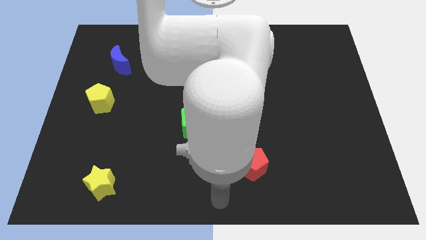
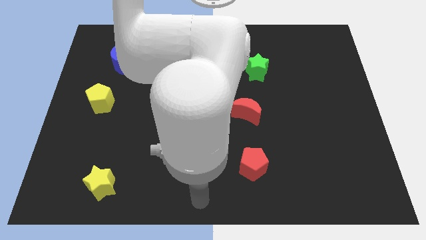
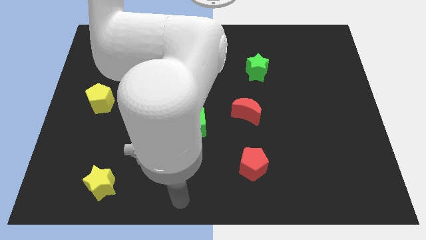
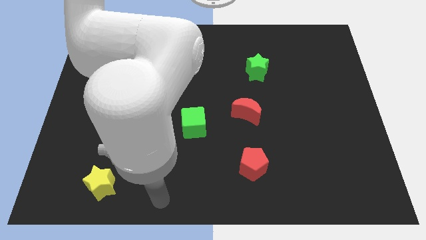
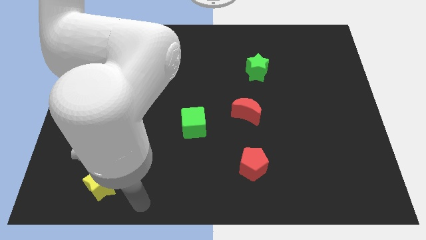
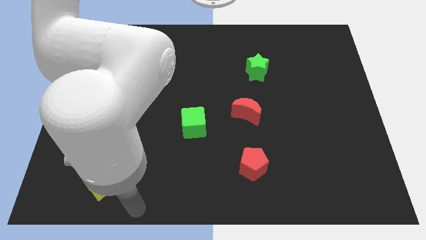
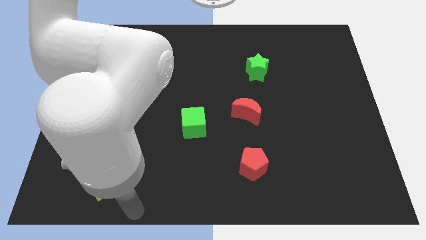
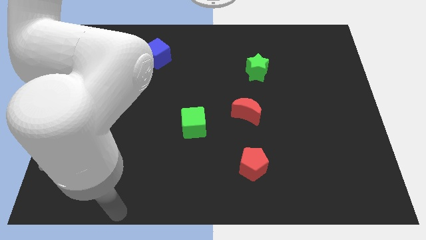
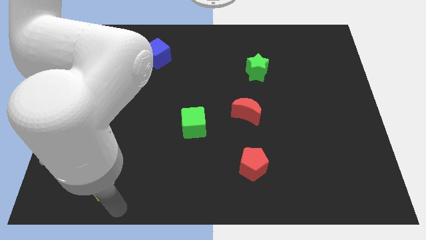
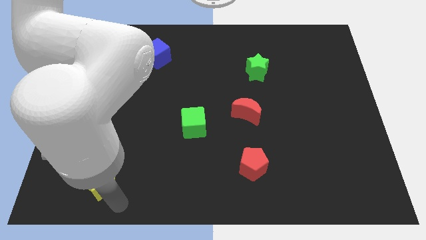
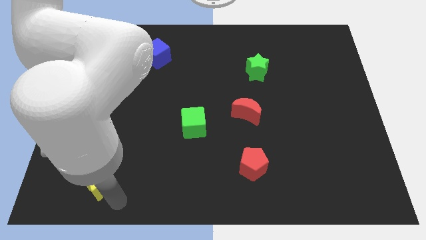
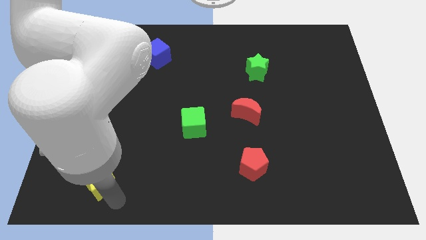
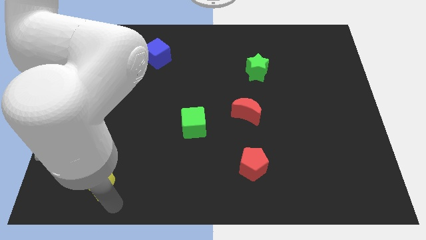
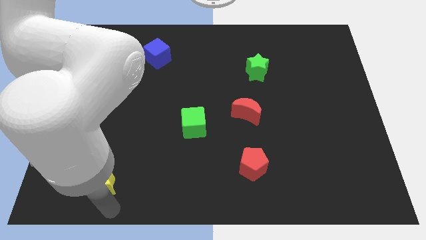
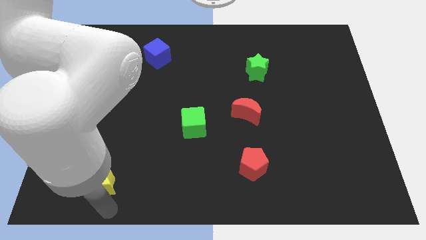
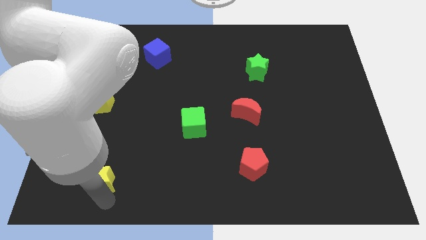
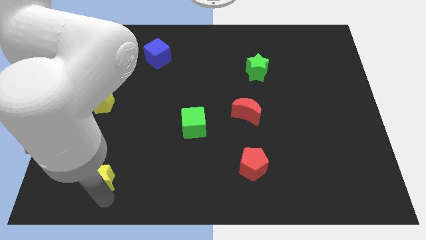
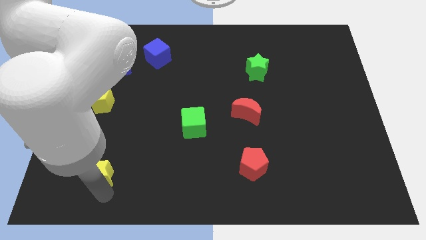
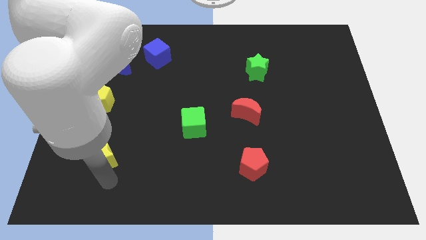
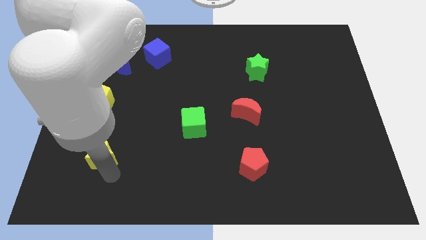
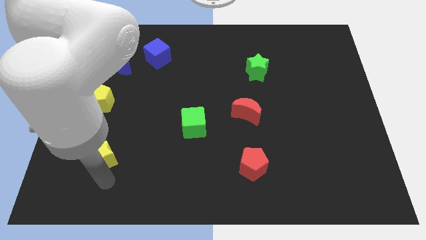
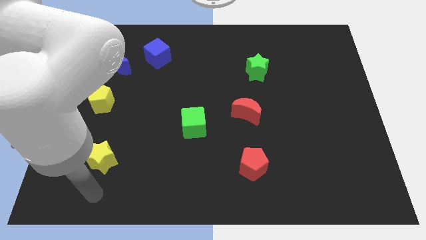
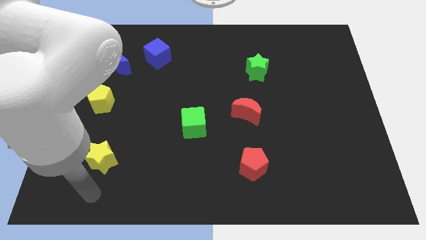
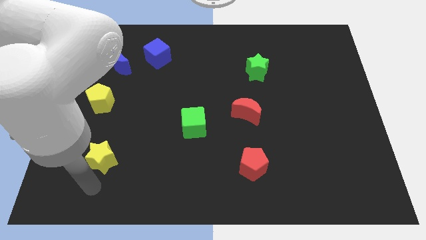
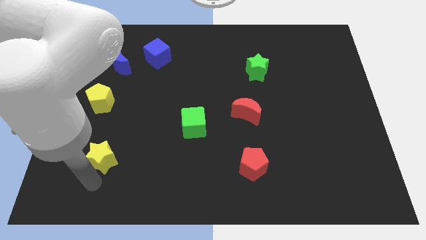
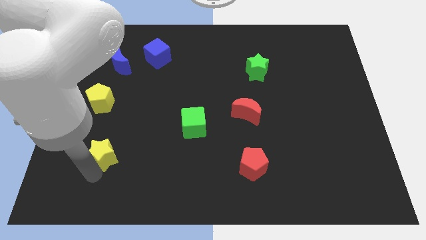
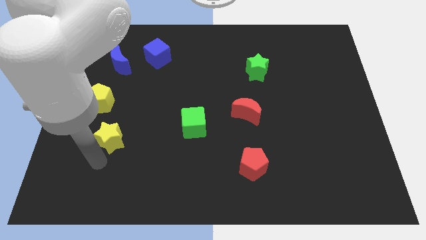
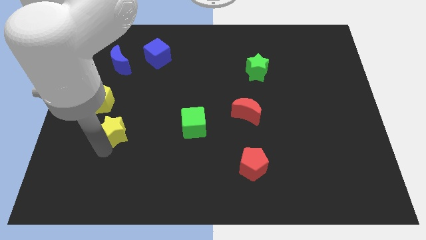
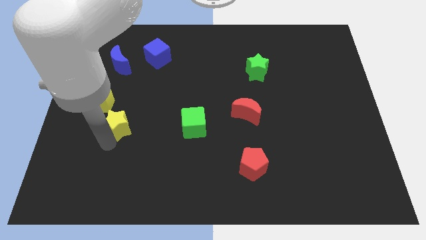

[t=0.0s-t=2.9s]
push the yellow star to the left of the green cube

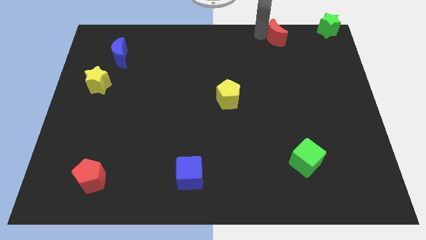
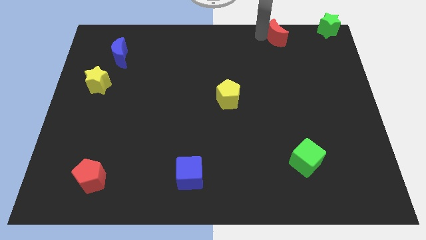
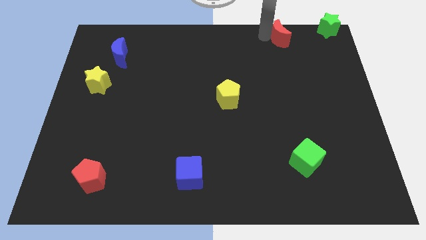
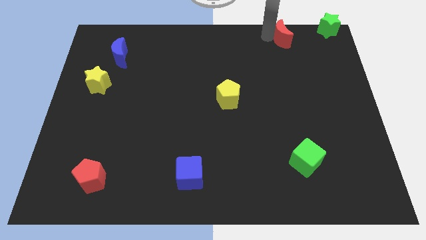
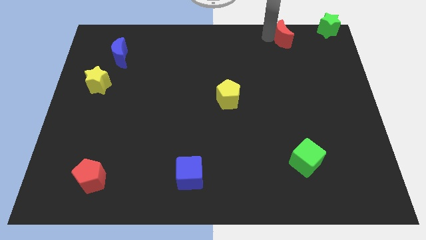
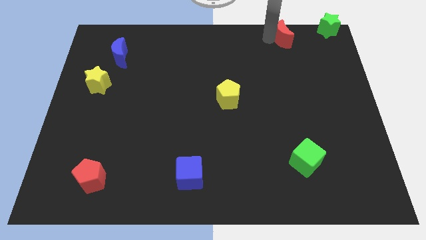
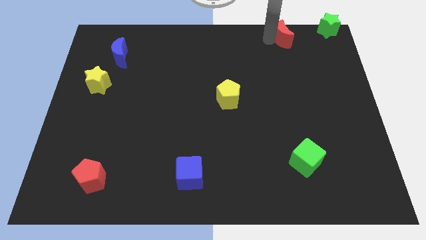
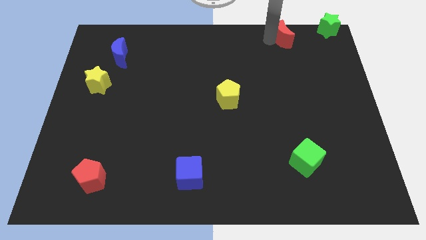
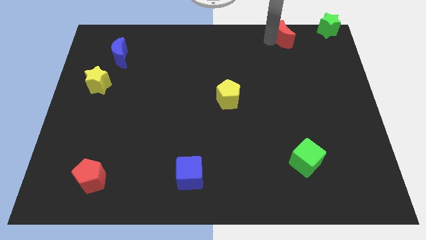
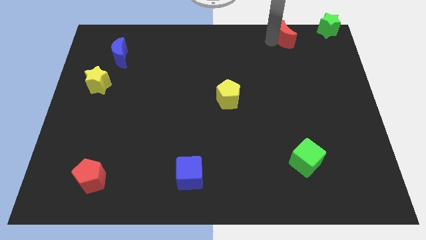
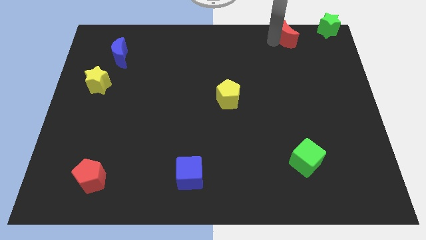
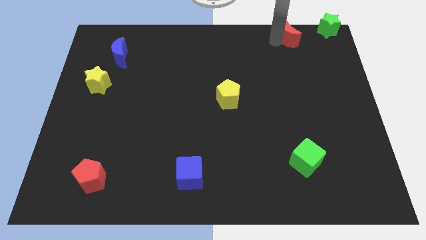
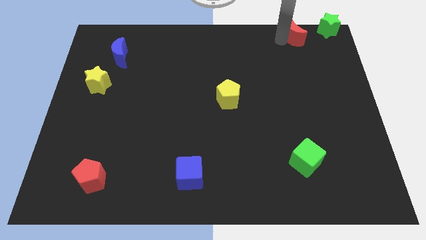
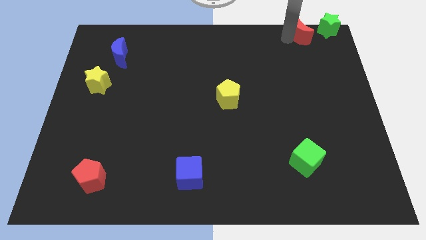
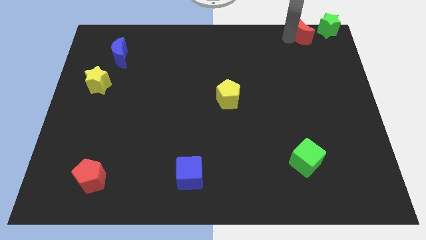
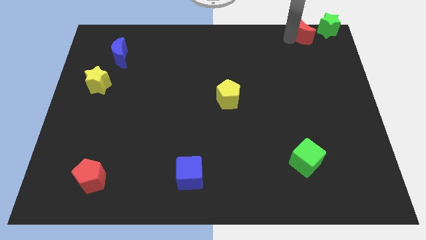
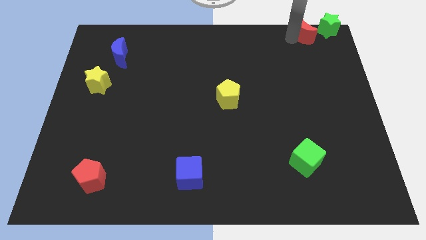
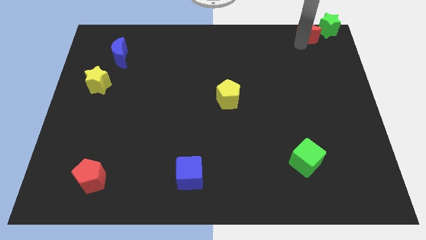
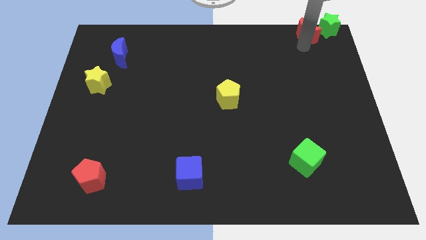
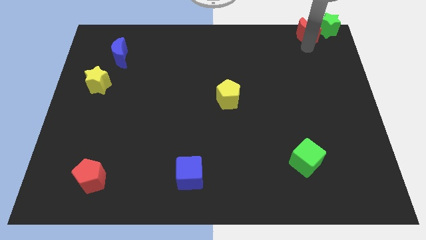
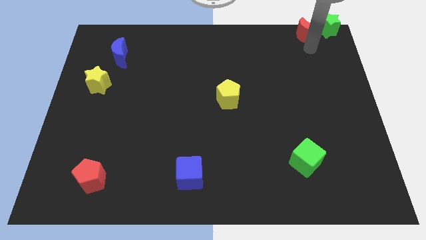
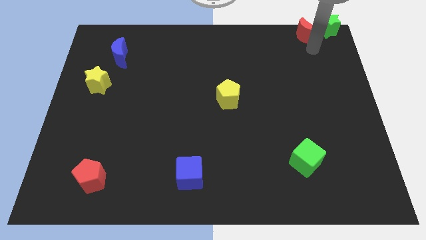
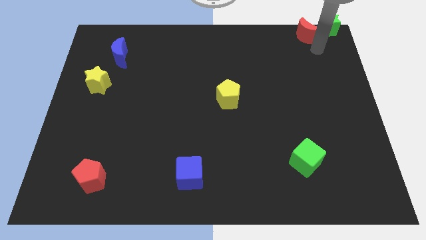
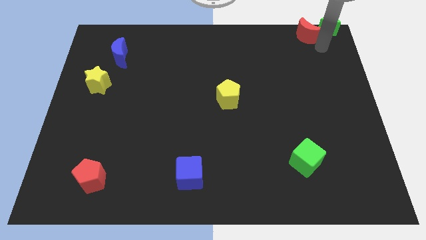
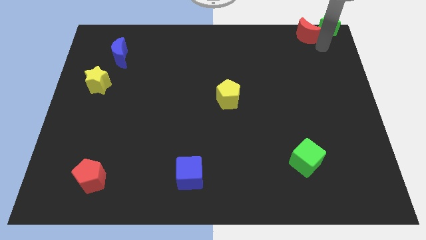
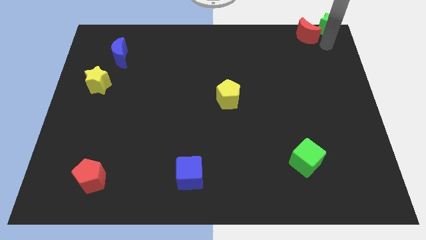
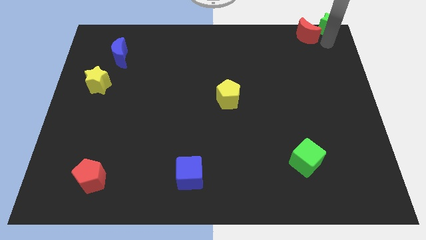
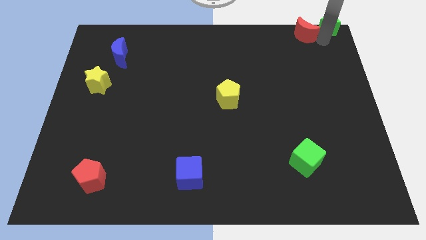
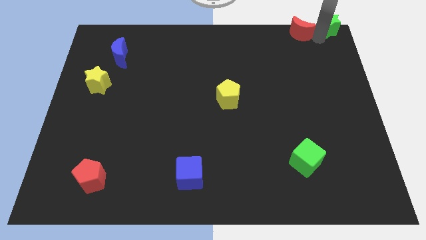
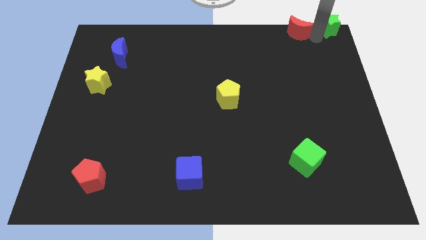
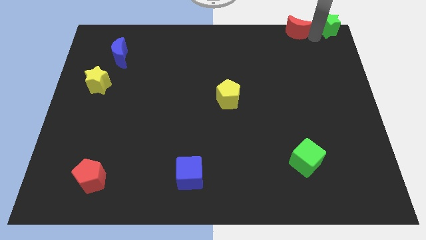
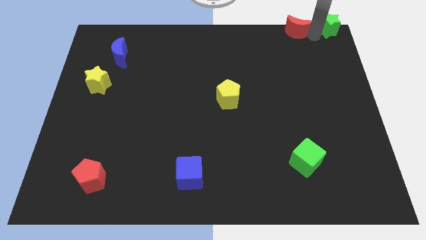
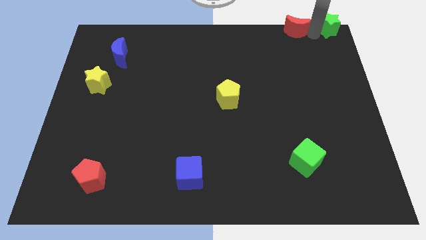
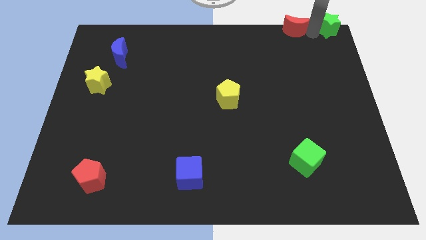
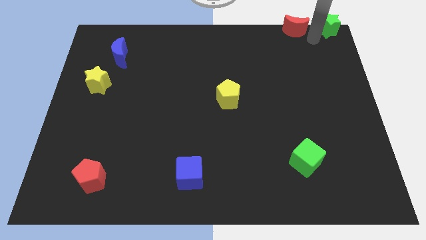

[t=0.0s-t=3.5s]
place your arm in between the red moon and green star

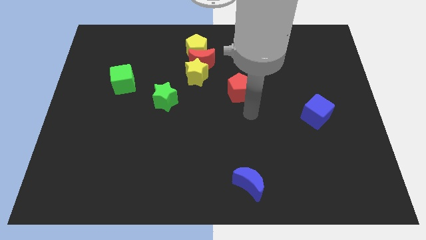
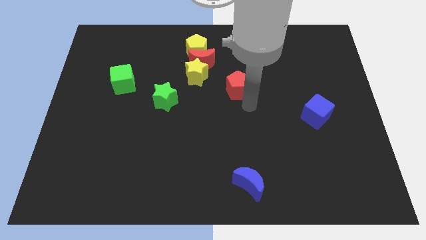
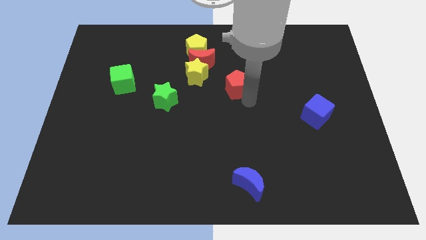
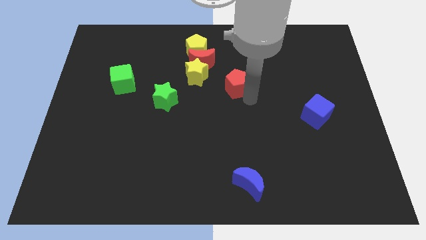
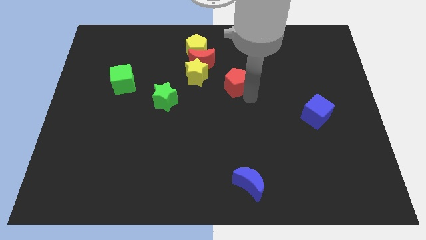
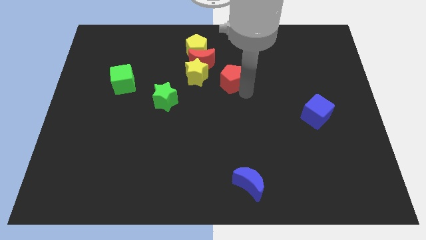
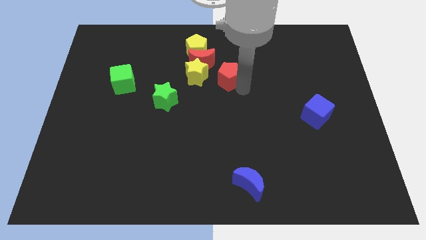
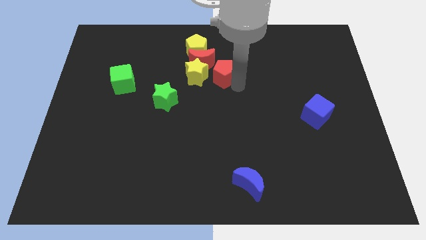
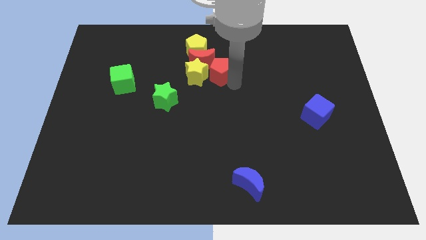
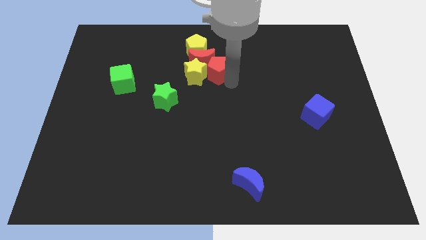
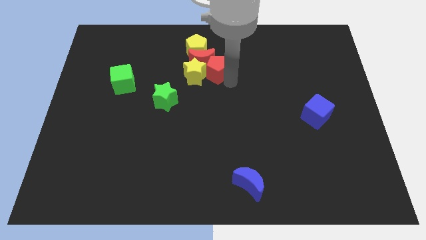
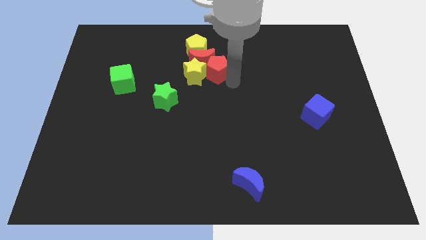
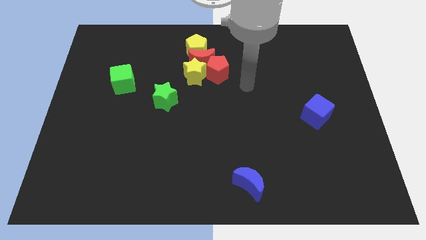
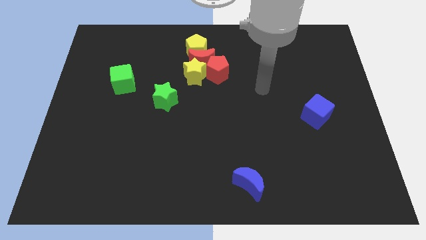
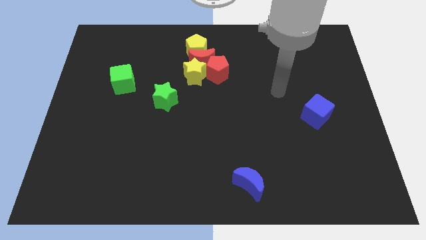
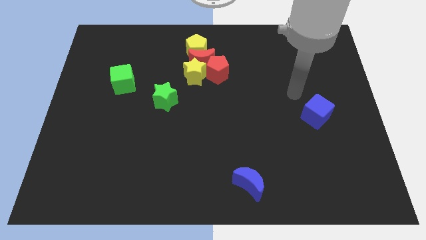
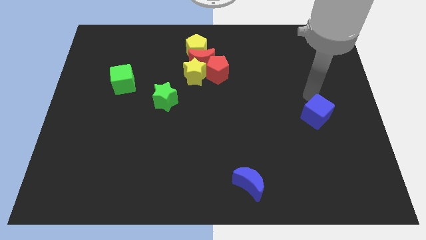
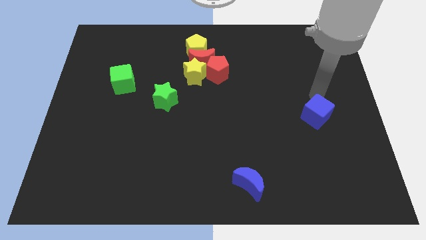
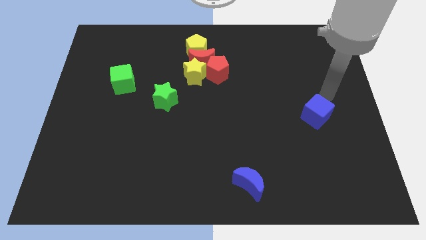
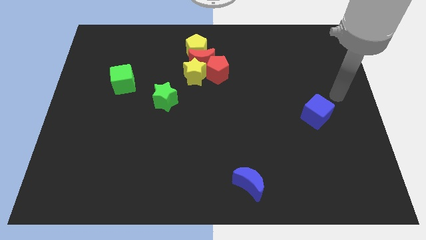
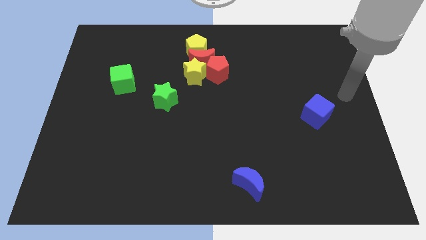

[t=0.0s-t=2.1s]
place the red pentagon below the right side of the red moon

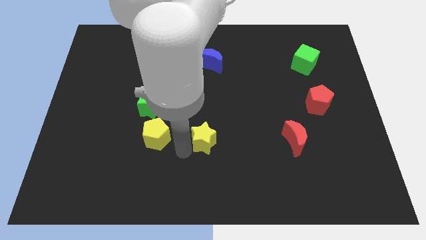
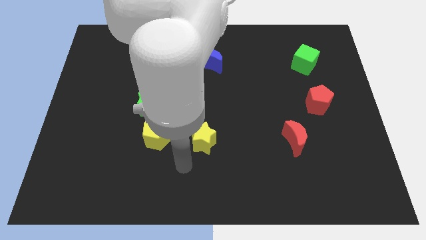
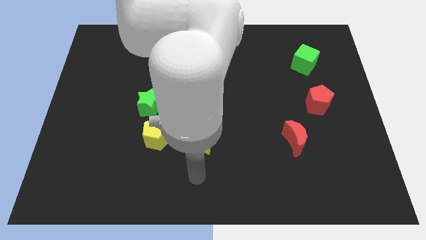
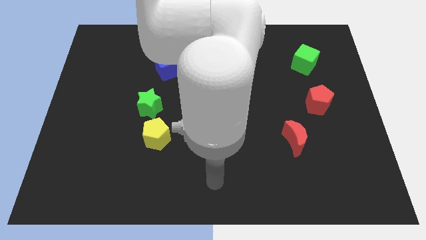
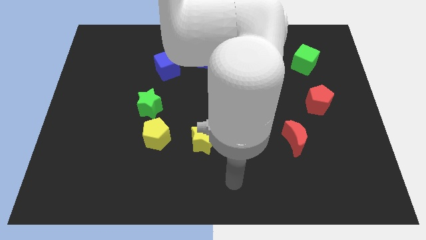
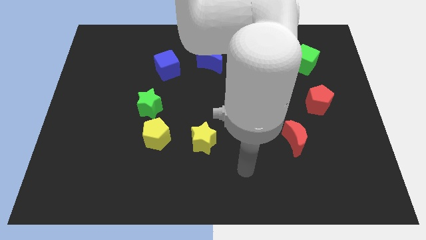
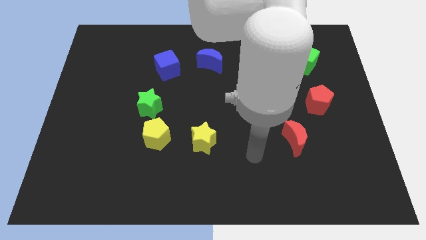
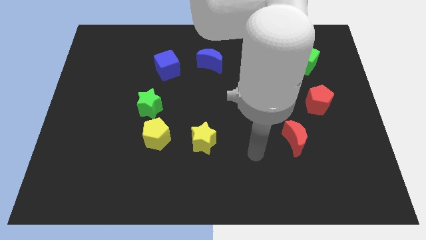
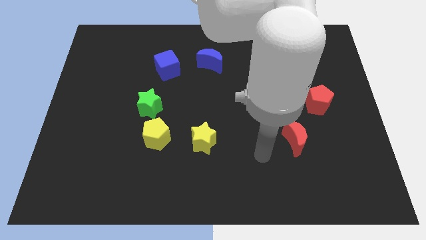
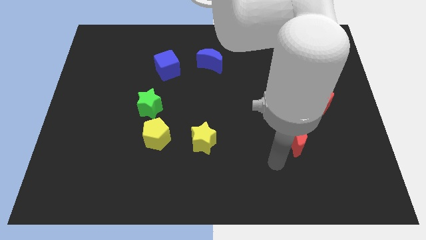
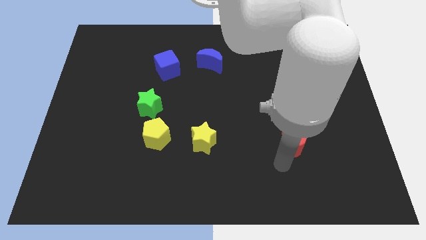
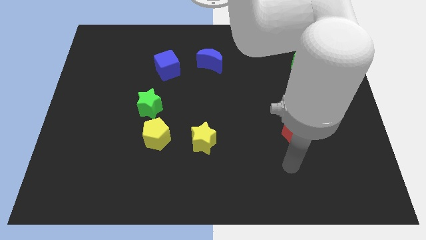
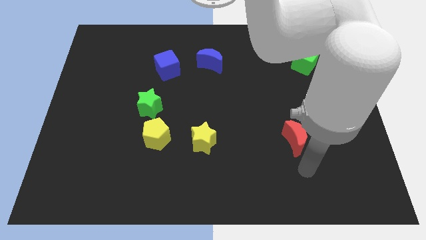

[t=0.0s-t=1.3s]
move your arm away from the yellow star
